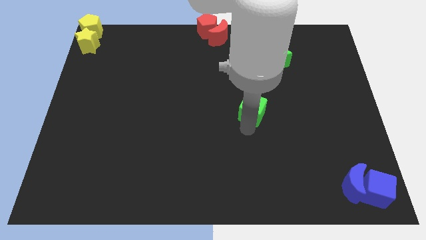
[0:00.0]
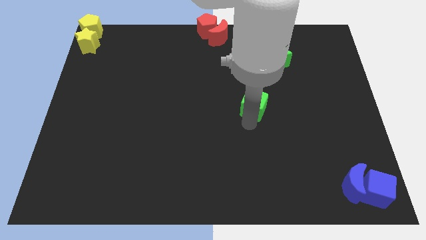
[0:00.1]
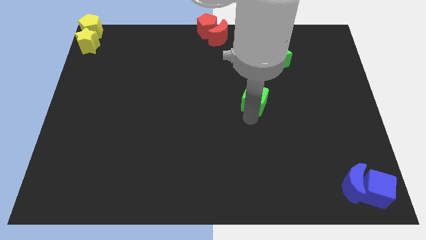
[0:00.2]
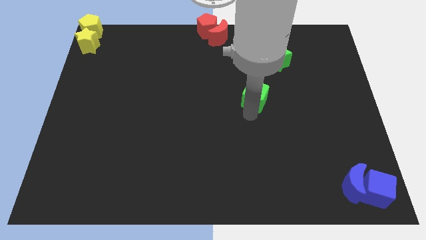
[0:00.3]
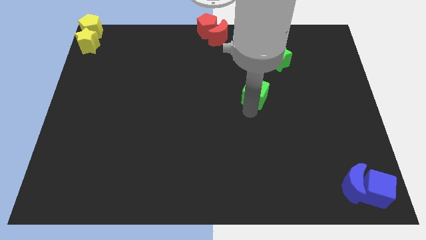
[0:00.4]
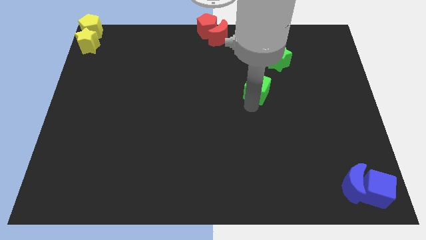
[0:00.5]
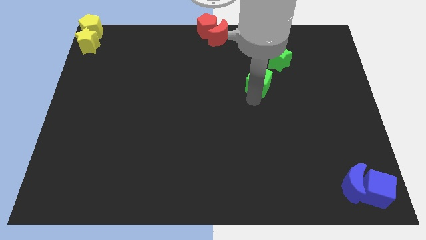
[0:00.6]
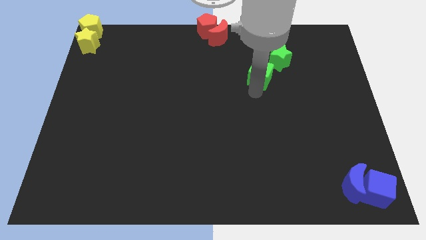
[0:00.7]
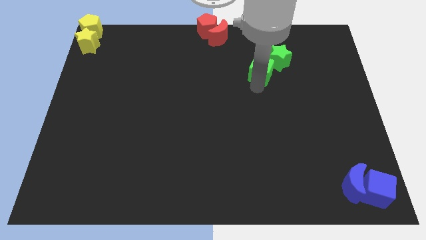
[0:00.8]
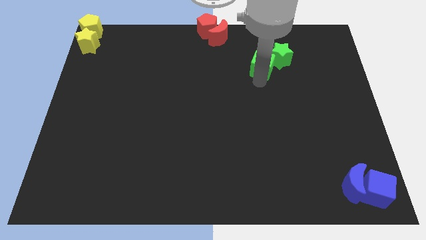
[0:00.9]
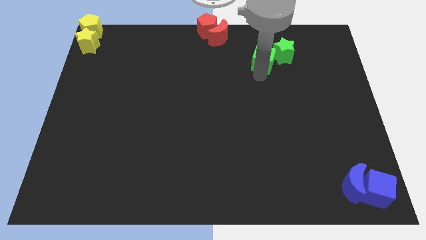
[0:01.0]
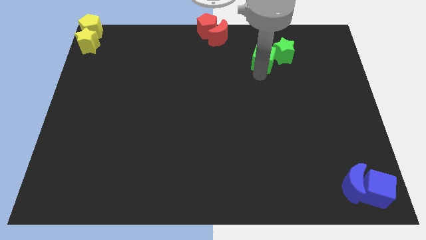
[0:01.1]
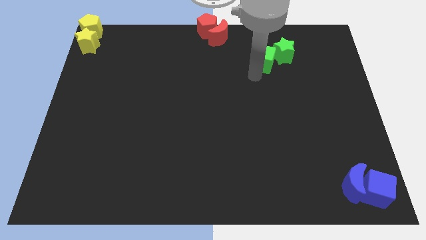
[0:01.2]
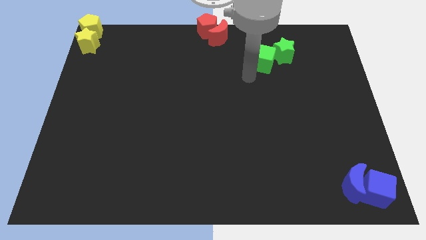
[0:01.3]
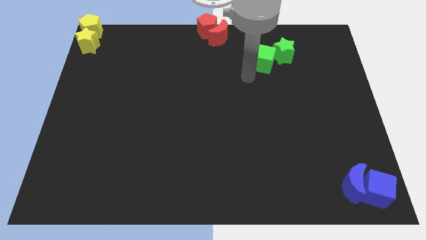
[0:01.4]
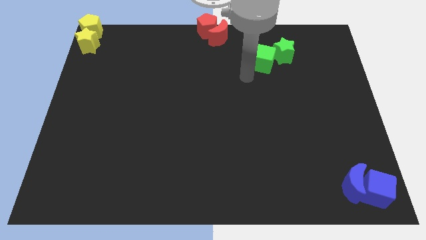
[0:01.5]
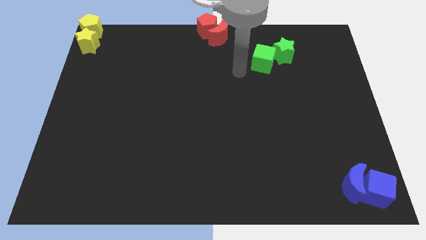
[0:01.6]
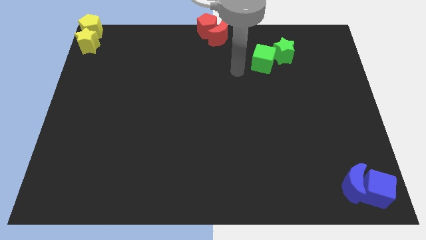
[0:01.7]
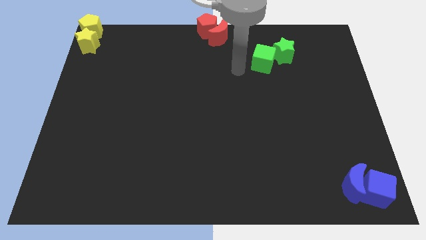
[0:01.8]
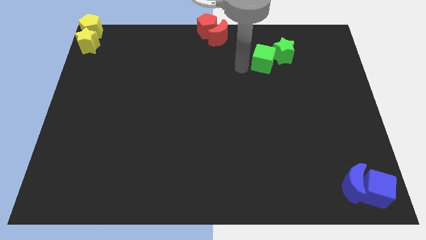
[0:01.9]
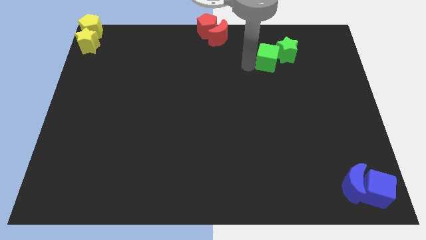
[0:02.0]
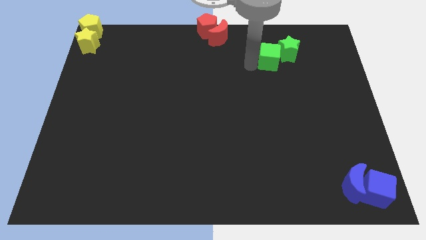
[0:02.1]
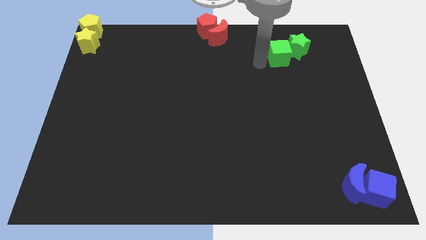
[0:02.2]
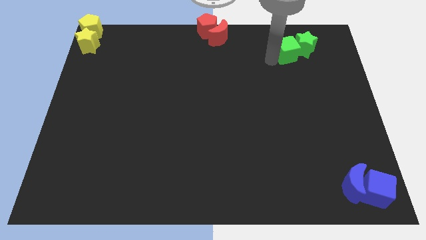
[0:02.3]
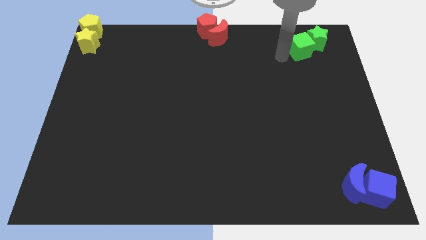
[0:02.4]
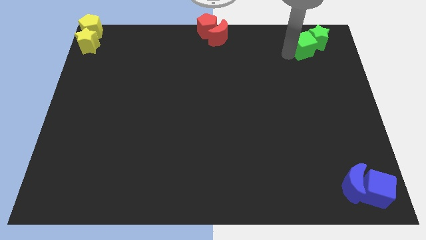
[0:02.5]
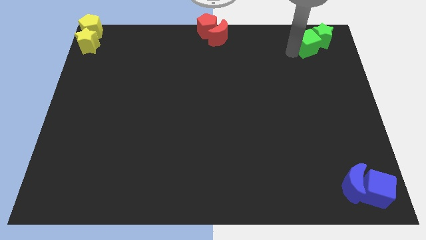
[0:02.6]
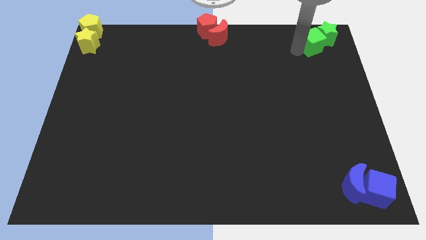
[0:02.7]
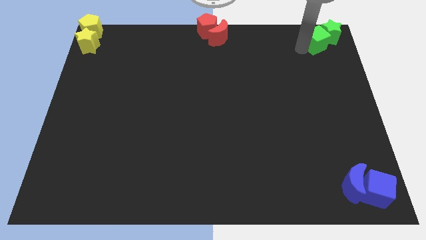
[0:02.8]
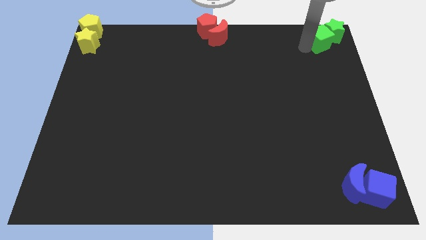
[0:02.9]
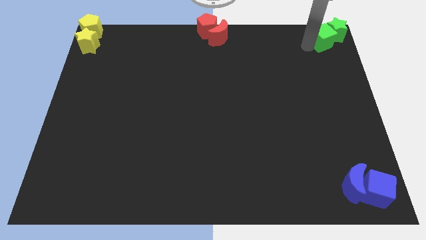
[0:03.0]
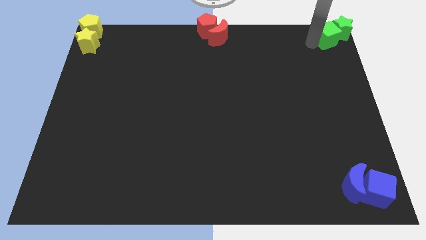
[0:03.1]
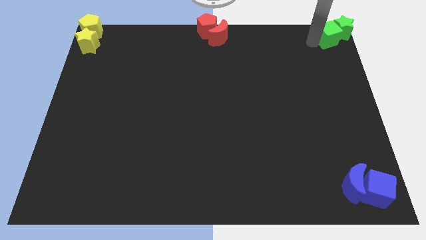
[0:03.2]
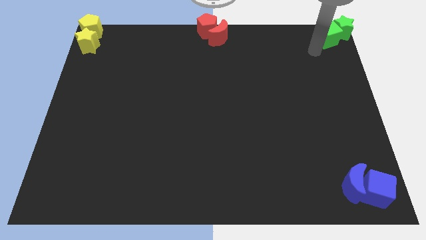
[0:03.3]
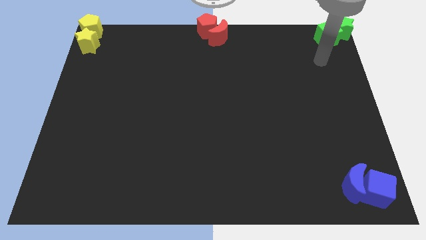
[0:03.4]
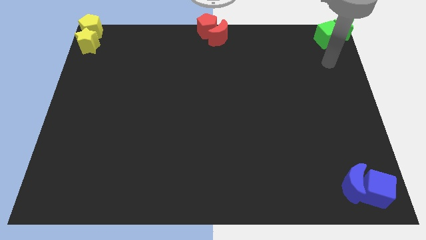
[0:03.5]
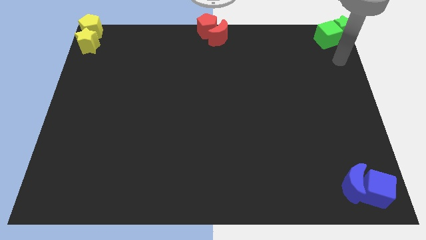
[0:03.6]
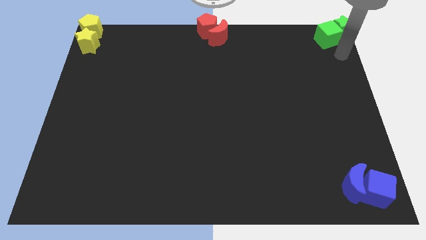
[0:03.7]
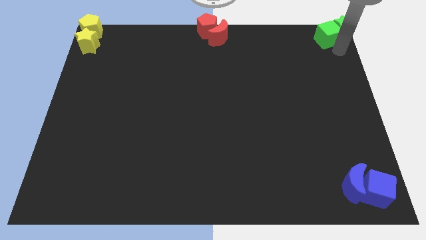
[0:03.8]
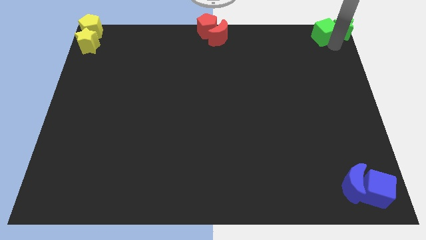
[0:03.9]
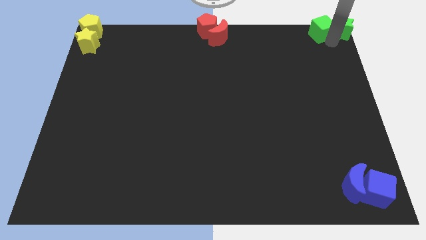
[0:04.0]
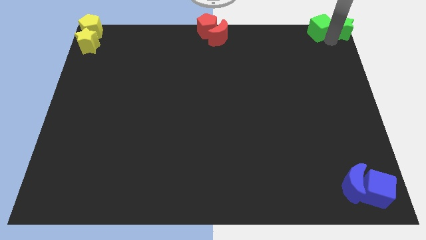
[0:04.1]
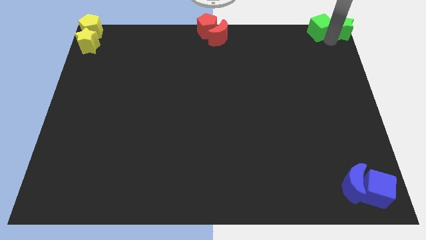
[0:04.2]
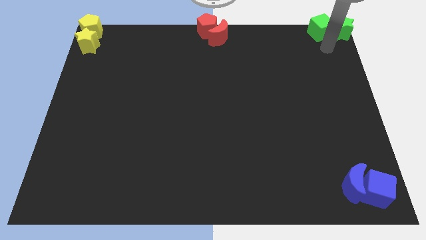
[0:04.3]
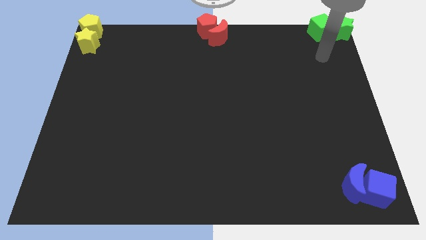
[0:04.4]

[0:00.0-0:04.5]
slide the green block to the top right corner of the board

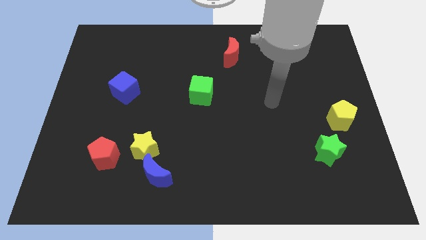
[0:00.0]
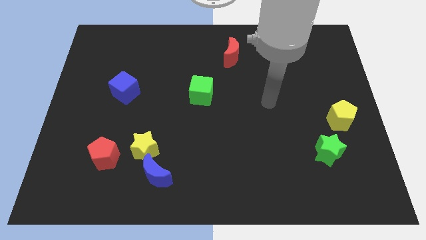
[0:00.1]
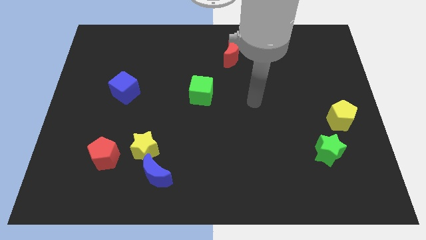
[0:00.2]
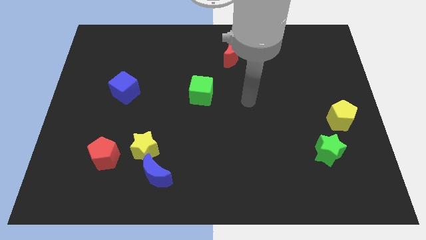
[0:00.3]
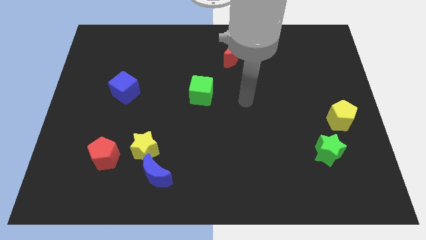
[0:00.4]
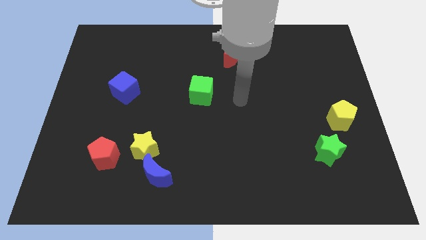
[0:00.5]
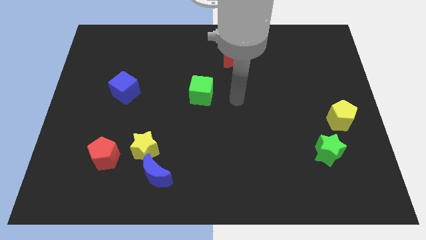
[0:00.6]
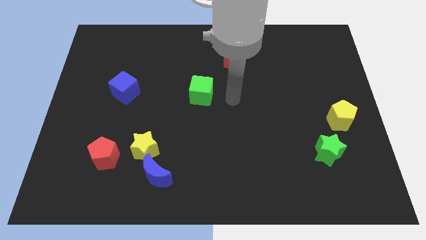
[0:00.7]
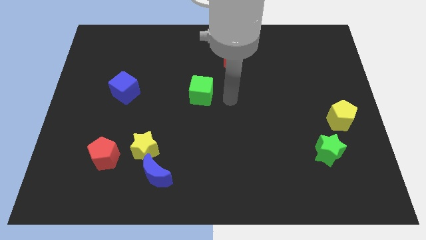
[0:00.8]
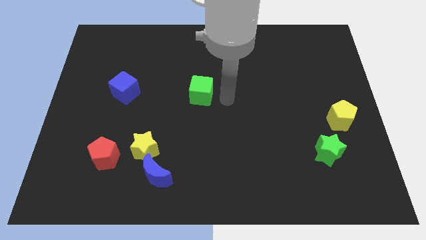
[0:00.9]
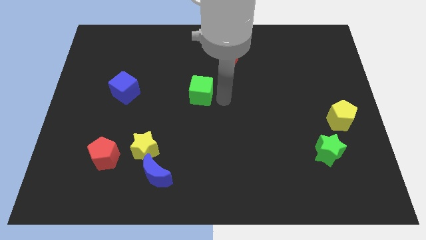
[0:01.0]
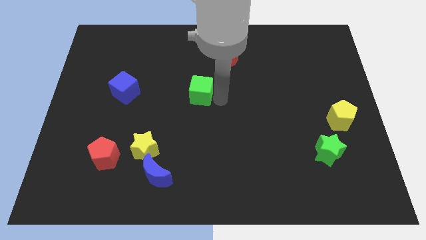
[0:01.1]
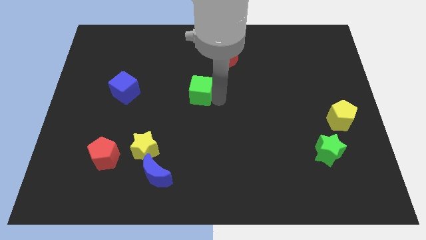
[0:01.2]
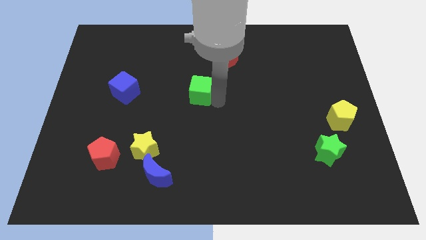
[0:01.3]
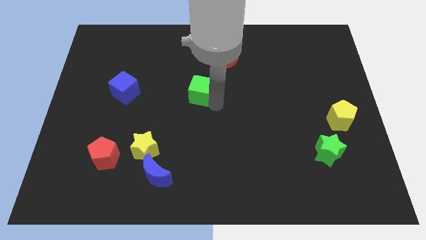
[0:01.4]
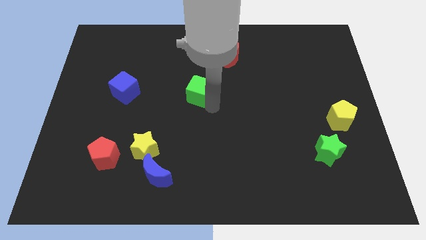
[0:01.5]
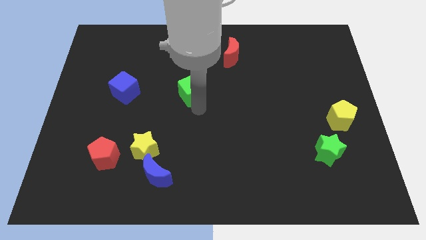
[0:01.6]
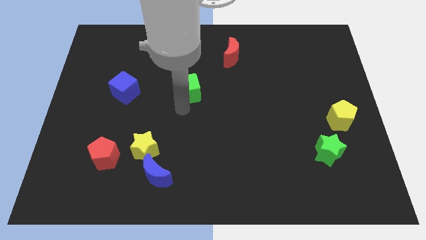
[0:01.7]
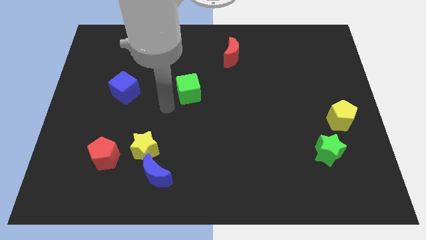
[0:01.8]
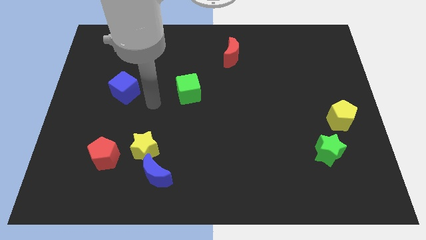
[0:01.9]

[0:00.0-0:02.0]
slightly move the green cube towards the blue cube

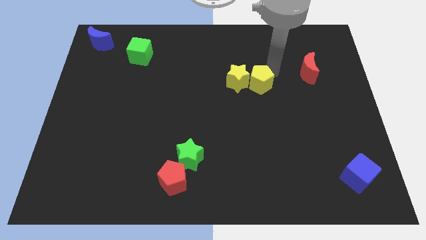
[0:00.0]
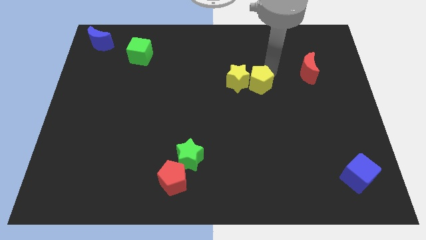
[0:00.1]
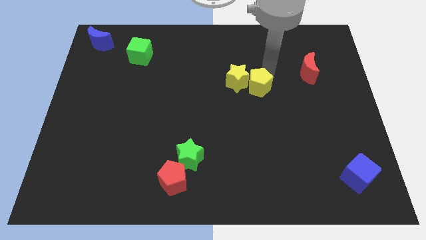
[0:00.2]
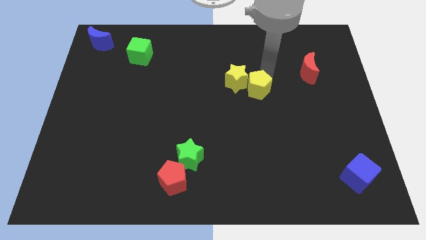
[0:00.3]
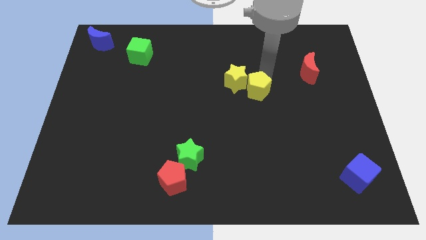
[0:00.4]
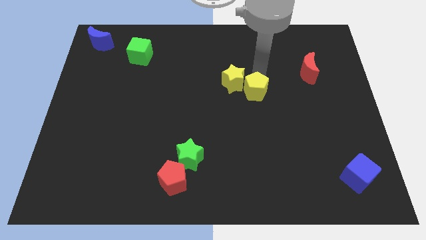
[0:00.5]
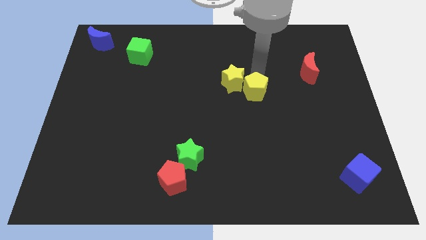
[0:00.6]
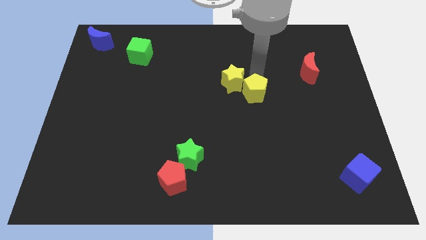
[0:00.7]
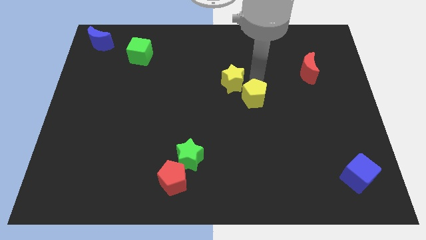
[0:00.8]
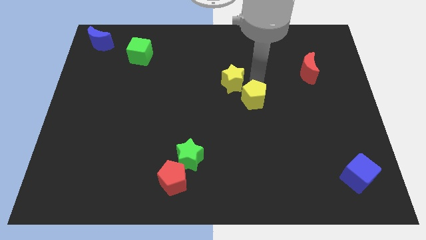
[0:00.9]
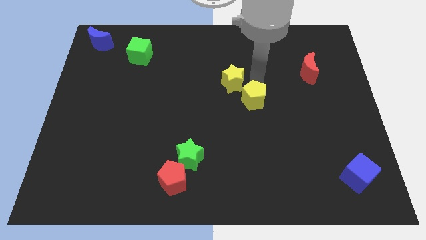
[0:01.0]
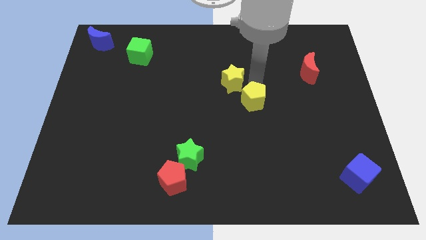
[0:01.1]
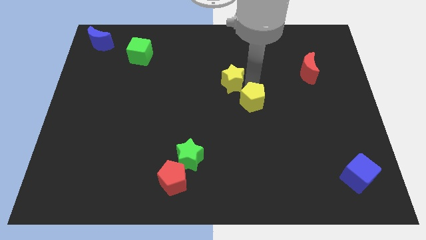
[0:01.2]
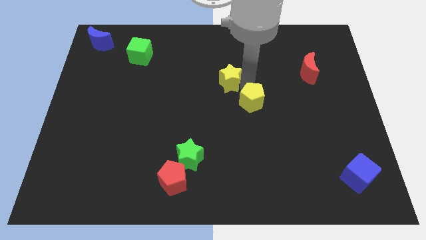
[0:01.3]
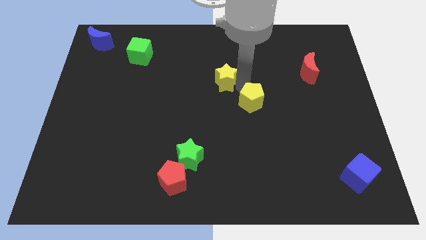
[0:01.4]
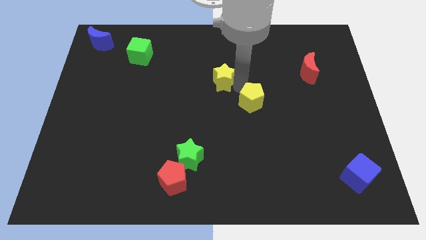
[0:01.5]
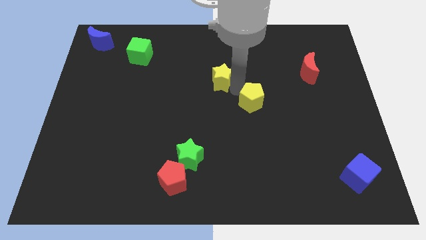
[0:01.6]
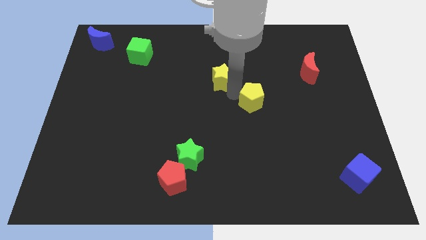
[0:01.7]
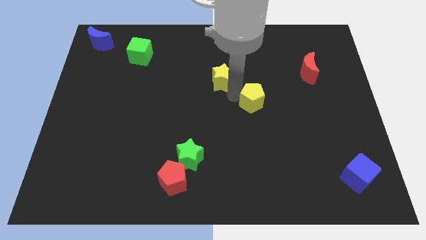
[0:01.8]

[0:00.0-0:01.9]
place your arm in between the yellow blocks

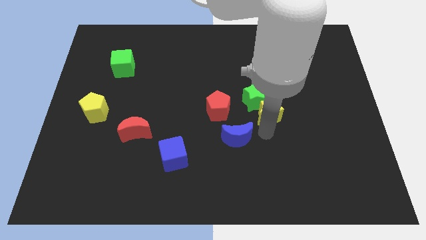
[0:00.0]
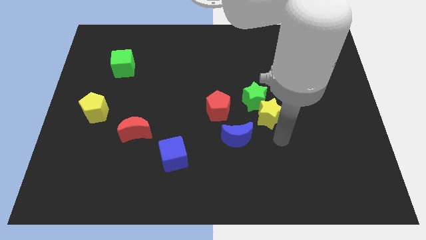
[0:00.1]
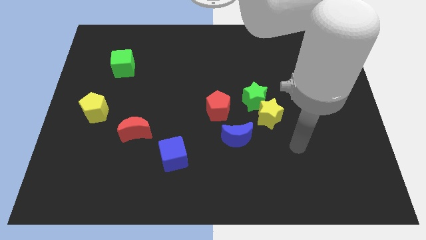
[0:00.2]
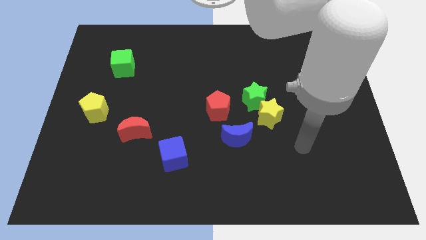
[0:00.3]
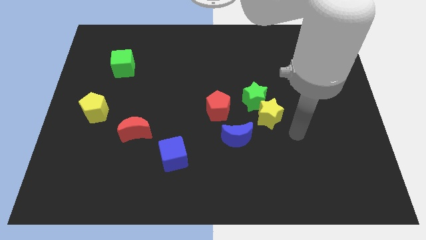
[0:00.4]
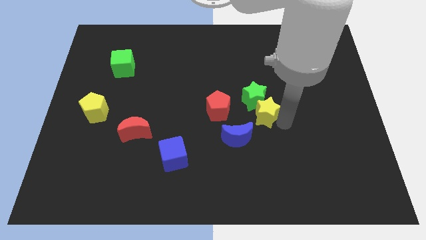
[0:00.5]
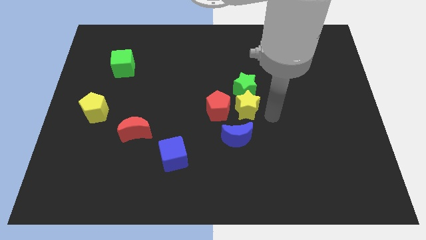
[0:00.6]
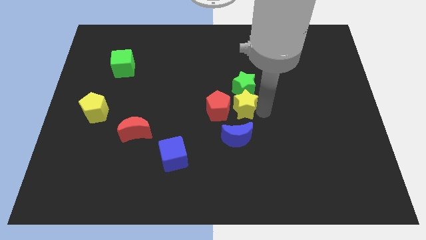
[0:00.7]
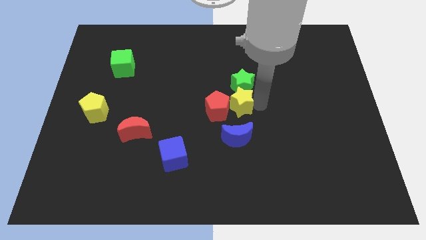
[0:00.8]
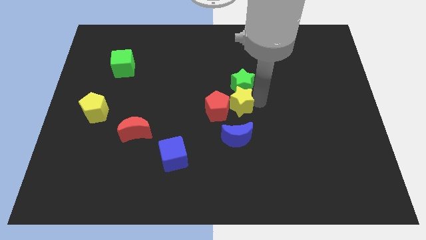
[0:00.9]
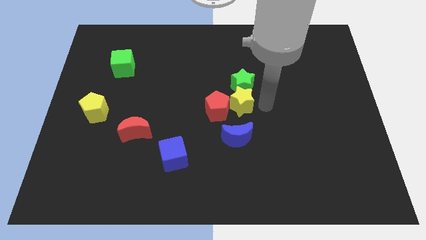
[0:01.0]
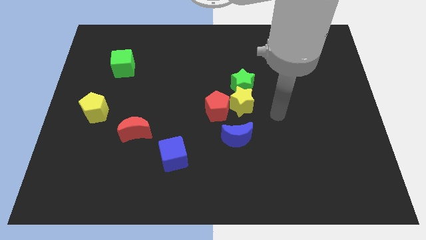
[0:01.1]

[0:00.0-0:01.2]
push the yellow star to the right of the red pentagon
